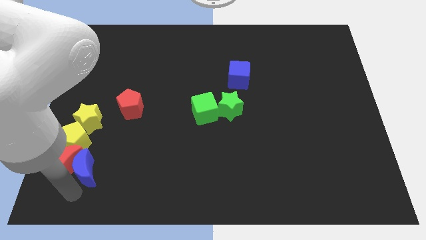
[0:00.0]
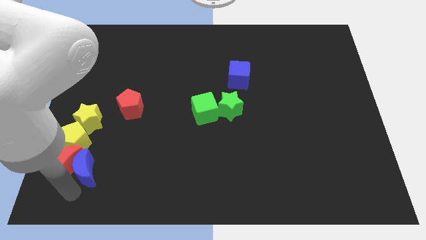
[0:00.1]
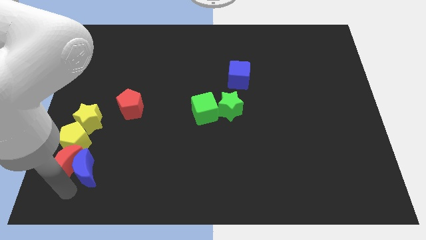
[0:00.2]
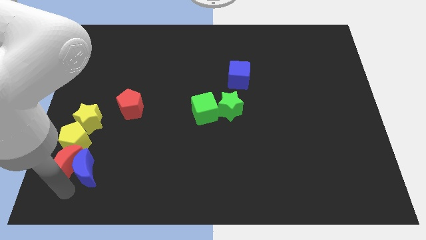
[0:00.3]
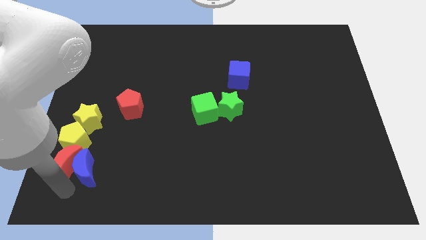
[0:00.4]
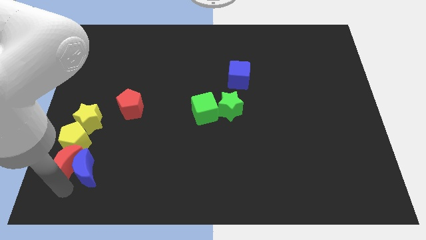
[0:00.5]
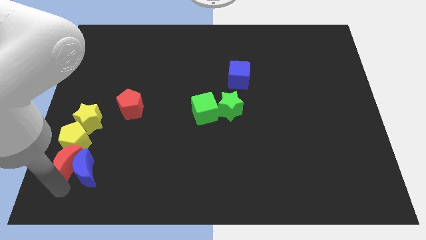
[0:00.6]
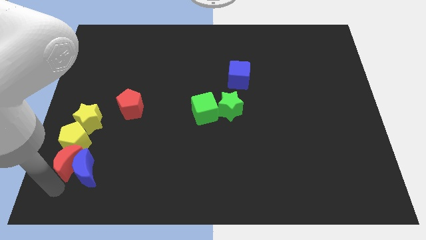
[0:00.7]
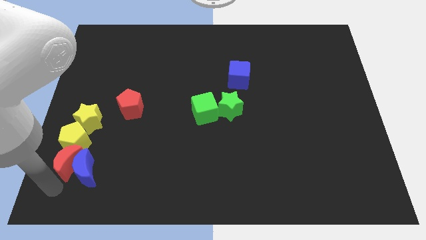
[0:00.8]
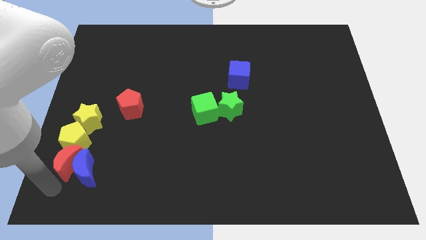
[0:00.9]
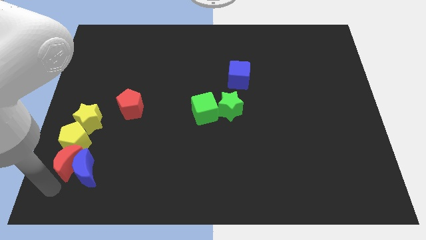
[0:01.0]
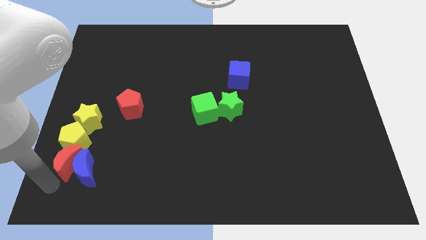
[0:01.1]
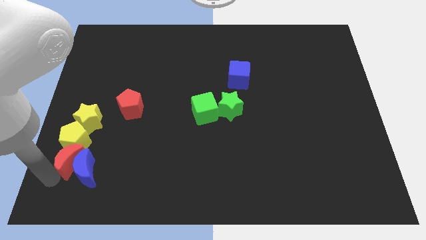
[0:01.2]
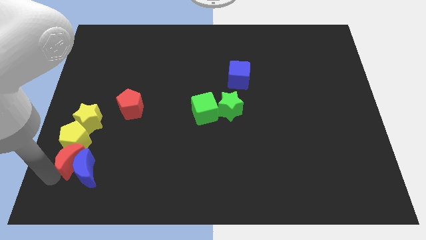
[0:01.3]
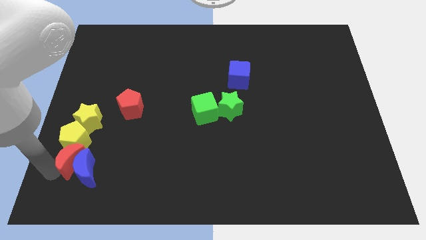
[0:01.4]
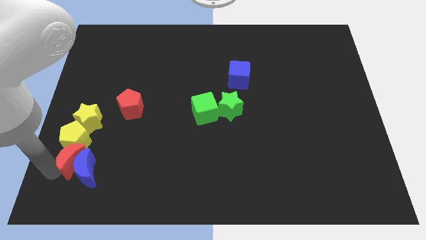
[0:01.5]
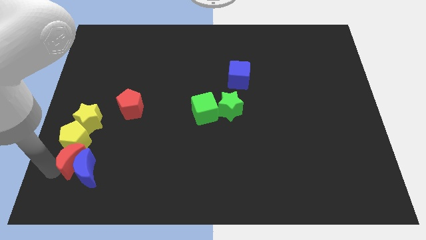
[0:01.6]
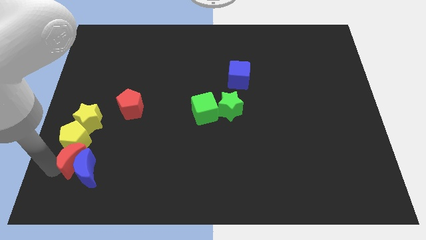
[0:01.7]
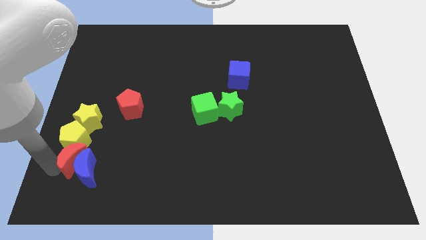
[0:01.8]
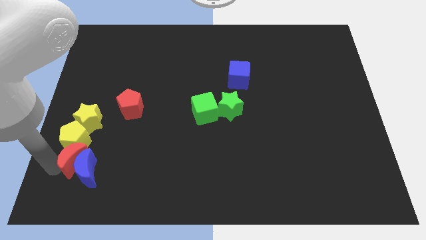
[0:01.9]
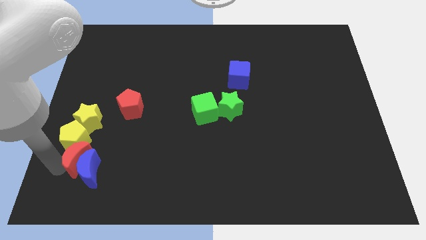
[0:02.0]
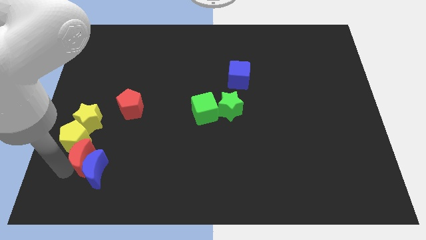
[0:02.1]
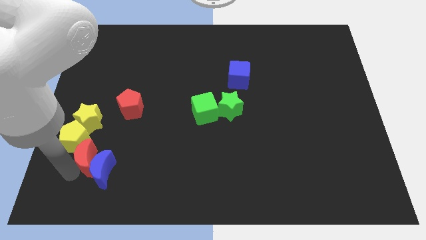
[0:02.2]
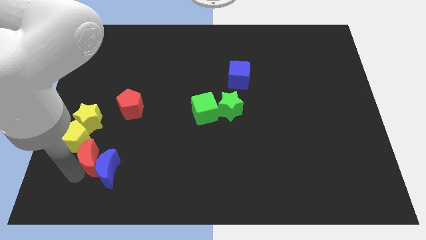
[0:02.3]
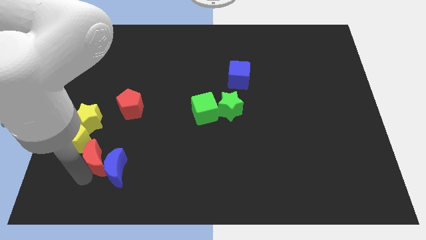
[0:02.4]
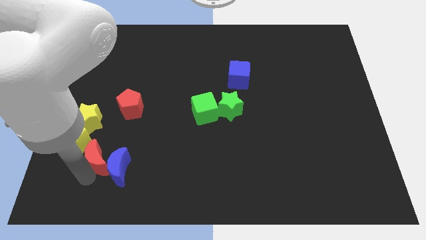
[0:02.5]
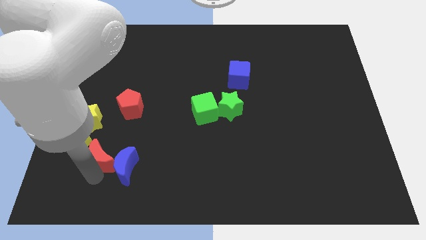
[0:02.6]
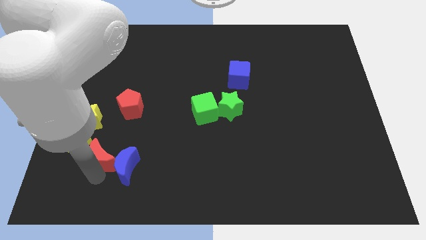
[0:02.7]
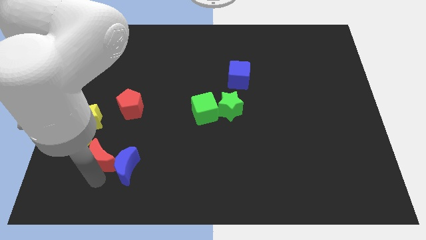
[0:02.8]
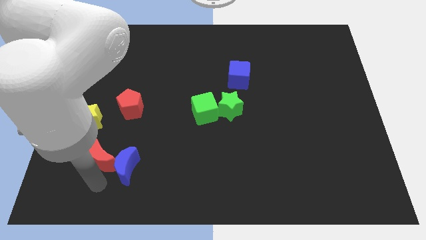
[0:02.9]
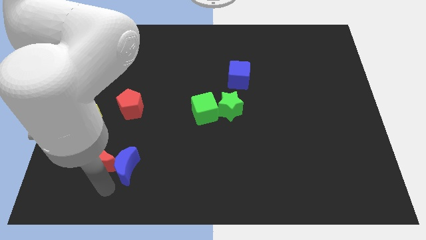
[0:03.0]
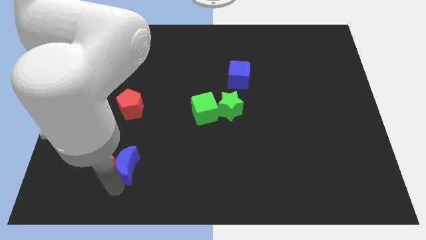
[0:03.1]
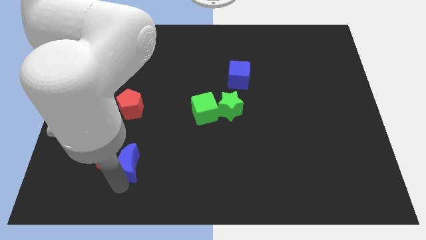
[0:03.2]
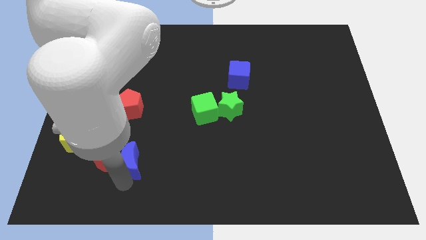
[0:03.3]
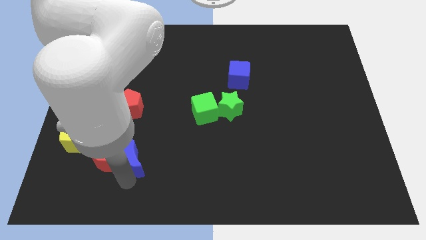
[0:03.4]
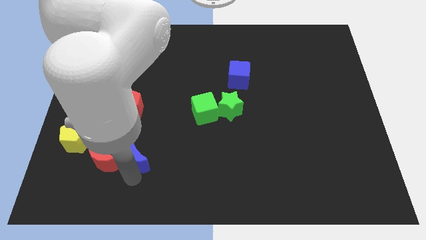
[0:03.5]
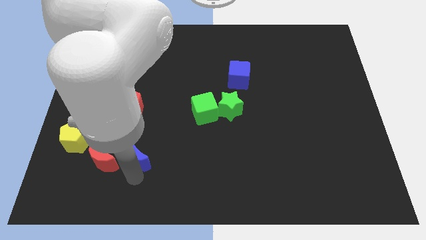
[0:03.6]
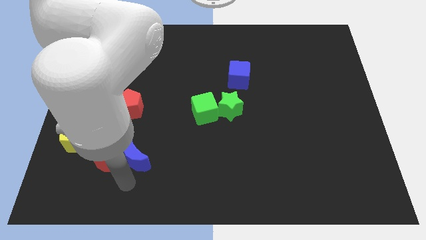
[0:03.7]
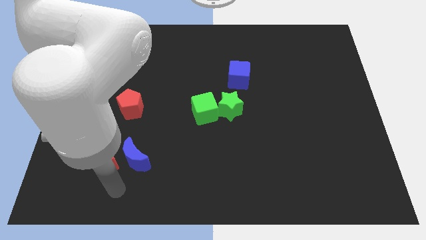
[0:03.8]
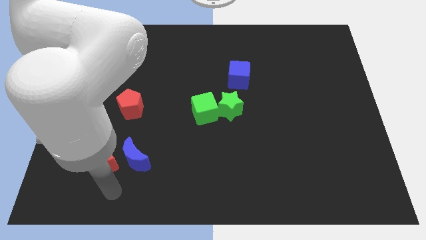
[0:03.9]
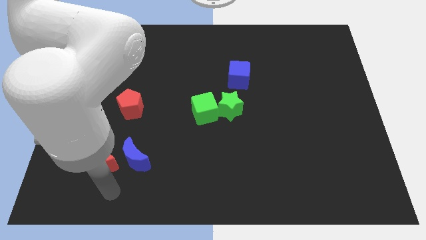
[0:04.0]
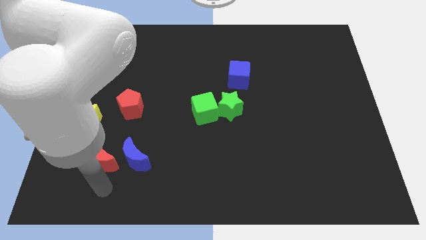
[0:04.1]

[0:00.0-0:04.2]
push the blue moon with the red moon to the right

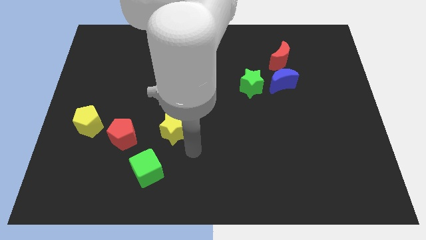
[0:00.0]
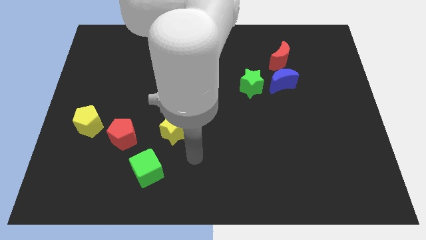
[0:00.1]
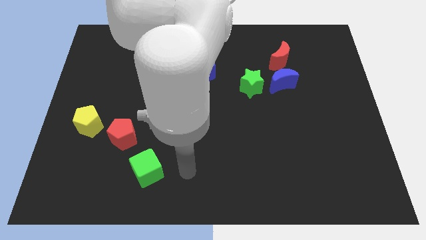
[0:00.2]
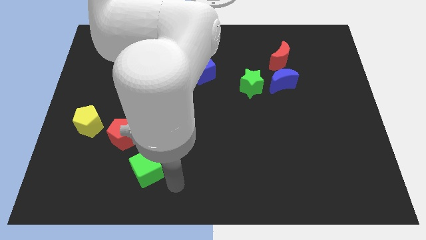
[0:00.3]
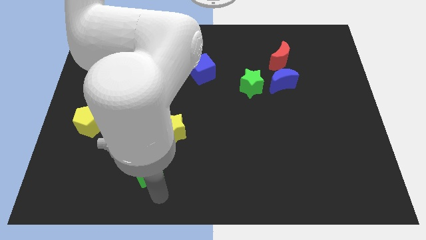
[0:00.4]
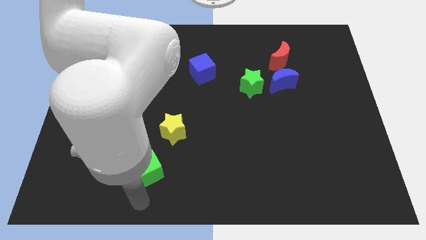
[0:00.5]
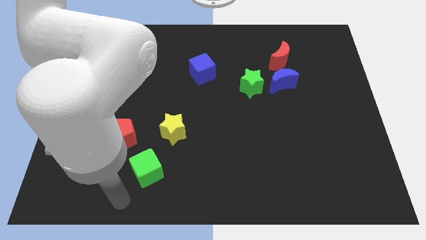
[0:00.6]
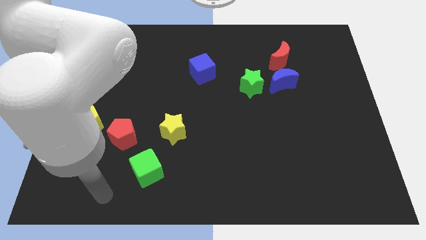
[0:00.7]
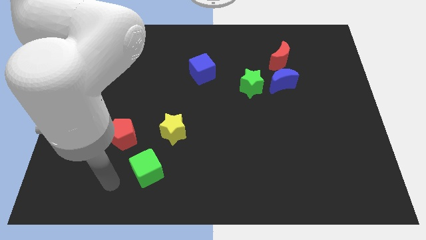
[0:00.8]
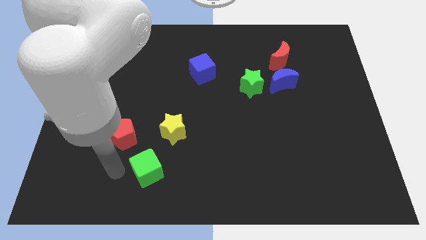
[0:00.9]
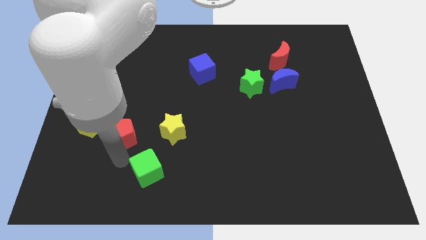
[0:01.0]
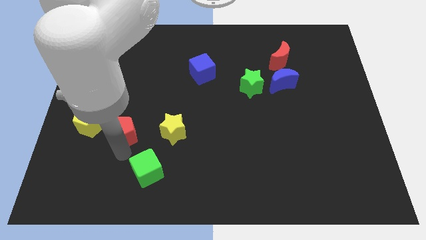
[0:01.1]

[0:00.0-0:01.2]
move your arm to the red pentagon

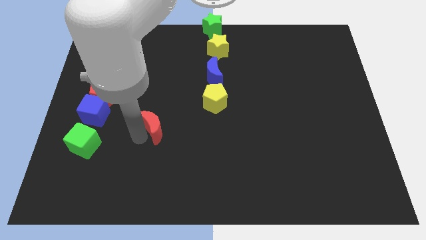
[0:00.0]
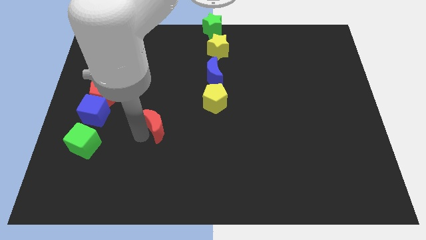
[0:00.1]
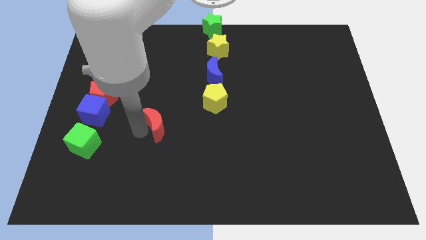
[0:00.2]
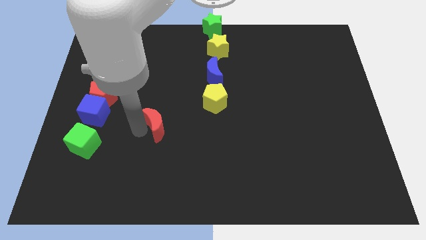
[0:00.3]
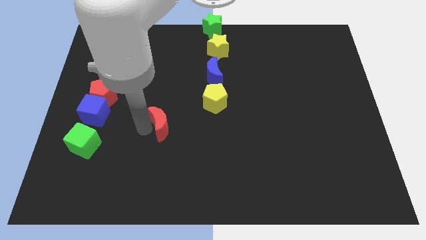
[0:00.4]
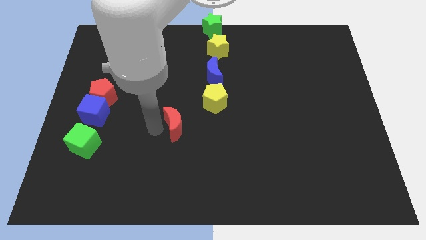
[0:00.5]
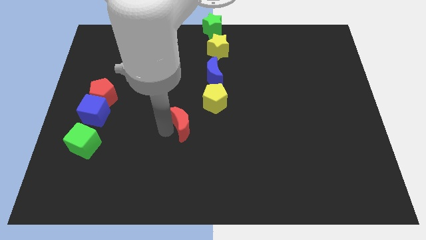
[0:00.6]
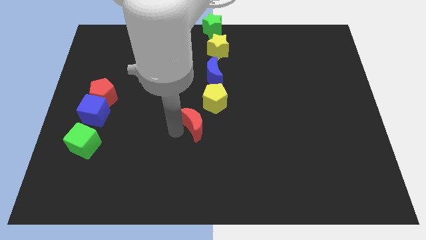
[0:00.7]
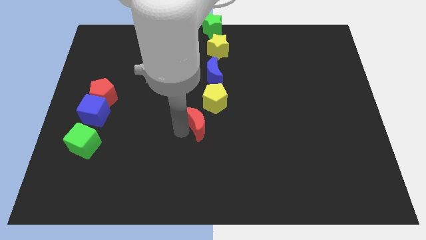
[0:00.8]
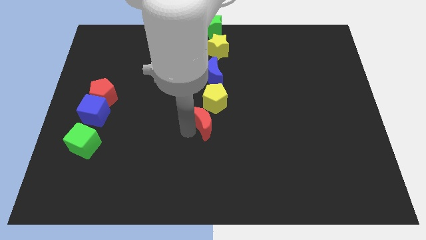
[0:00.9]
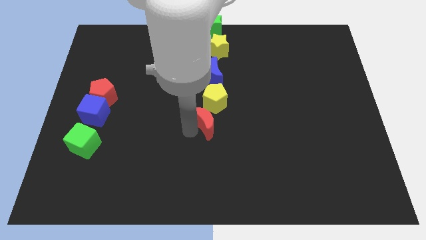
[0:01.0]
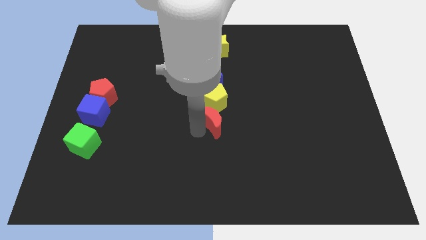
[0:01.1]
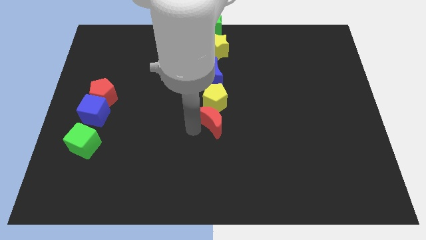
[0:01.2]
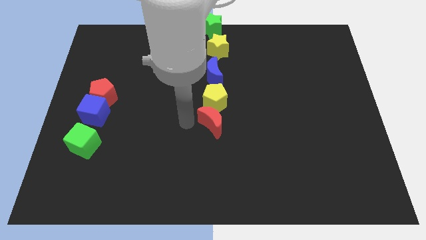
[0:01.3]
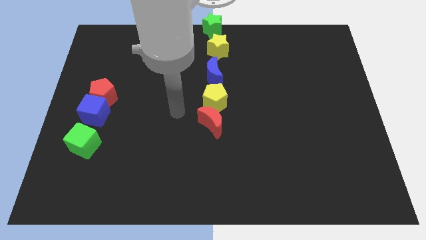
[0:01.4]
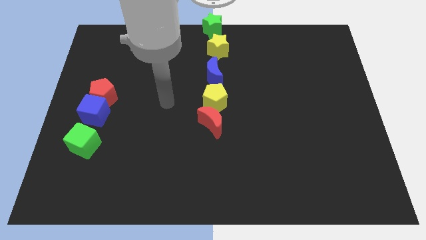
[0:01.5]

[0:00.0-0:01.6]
slightly push the red crescent under to the yellow pentagon

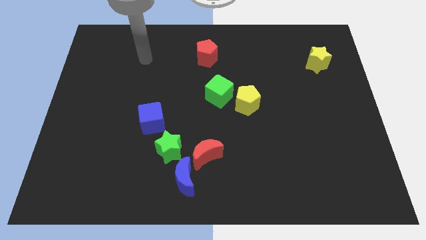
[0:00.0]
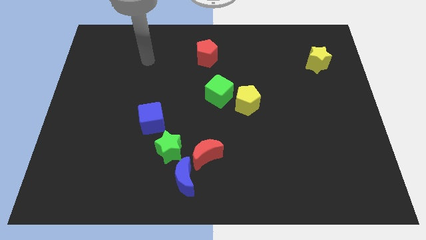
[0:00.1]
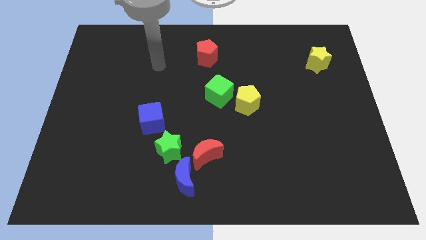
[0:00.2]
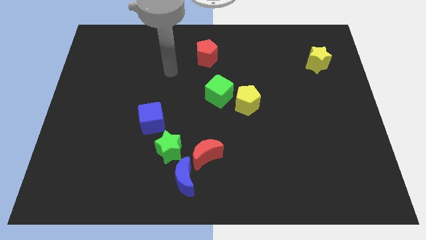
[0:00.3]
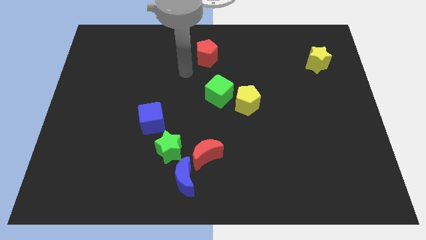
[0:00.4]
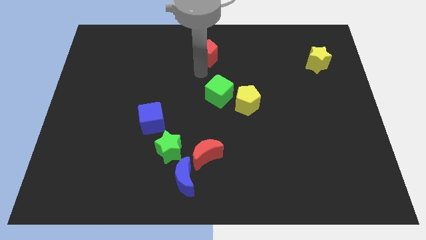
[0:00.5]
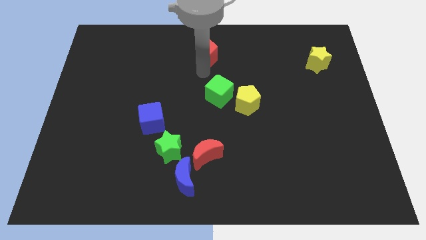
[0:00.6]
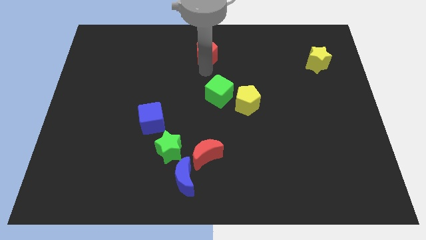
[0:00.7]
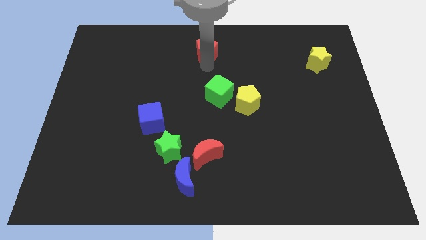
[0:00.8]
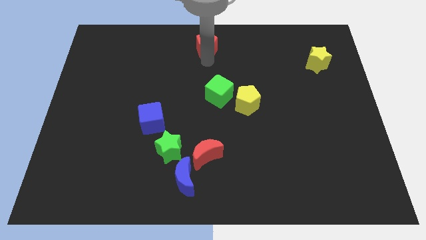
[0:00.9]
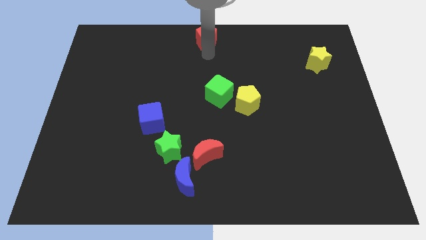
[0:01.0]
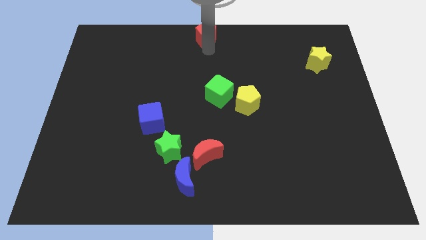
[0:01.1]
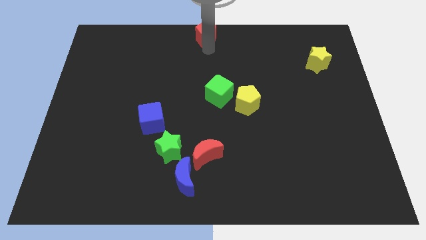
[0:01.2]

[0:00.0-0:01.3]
push the red pentagon to center top

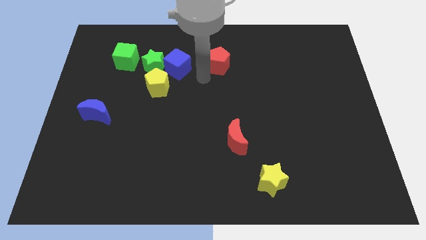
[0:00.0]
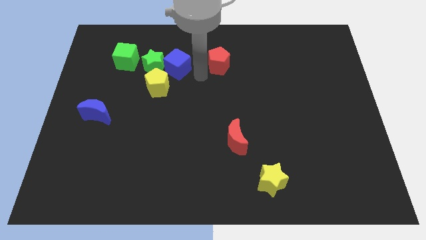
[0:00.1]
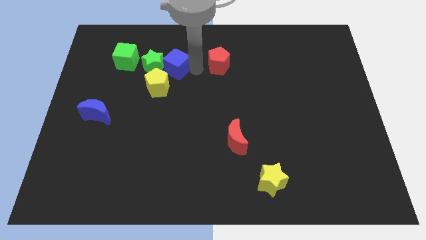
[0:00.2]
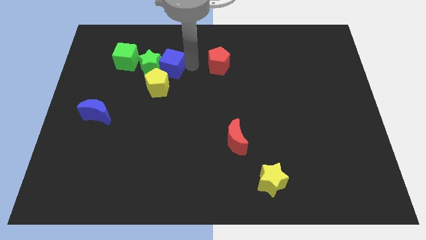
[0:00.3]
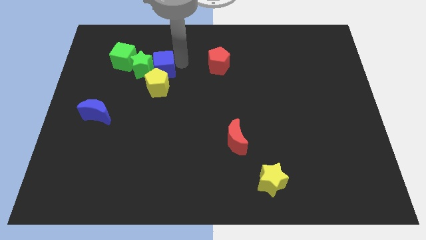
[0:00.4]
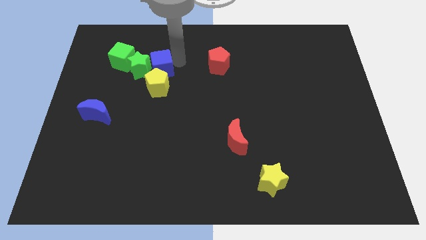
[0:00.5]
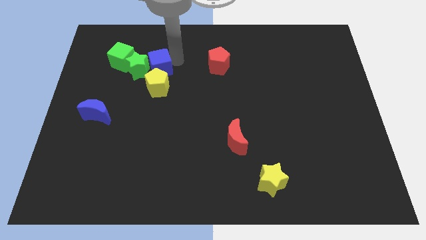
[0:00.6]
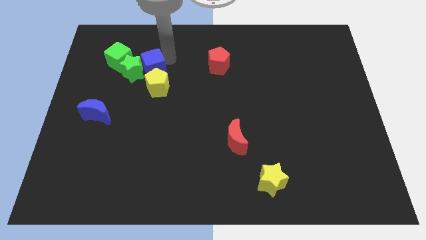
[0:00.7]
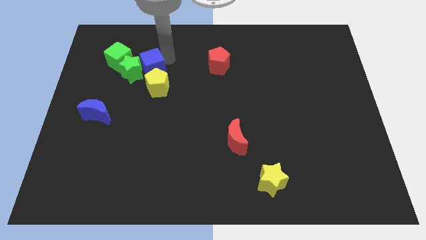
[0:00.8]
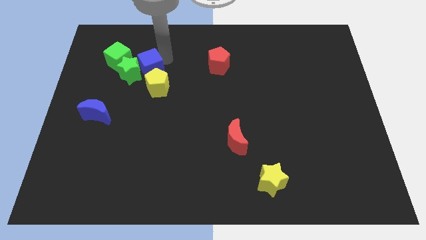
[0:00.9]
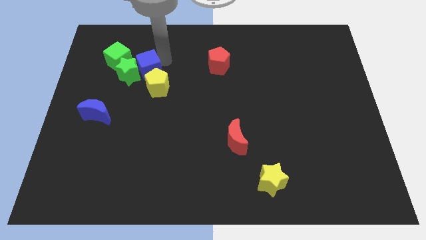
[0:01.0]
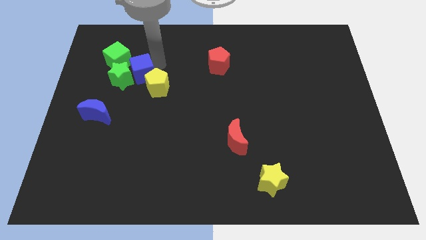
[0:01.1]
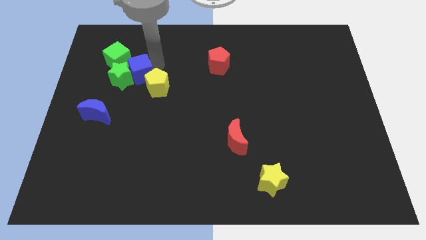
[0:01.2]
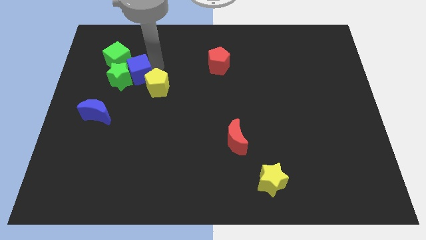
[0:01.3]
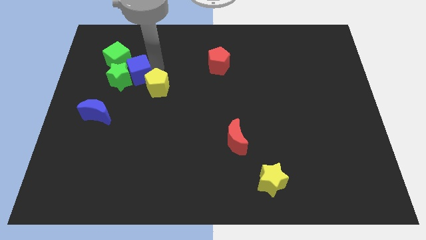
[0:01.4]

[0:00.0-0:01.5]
push blue cube slightly towards left
